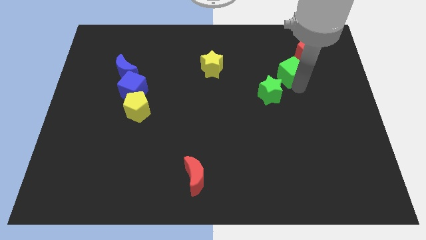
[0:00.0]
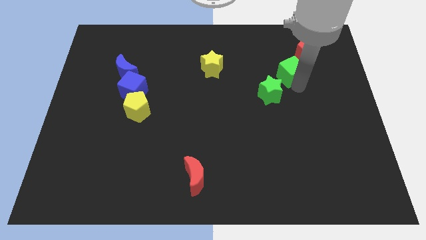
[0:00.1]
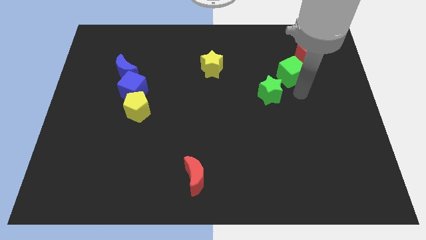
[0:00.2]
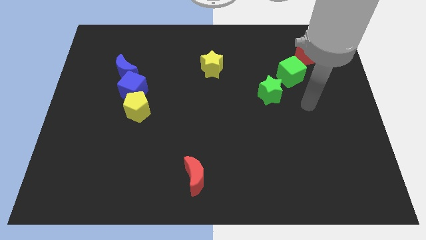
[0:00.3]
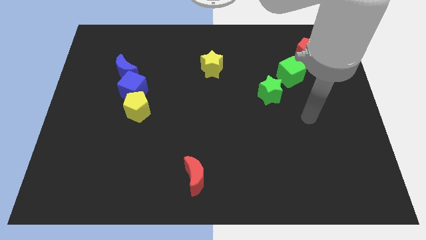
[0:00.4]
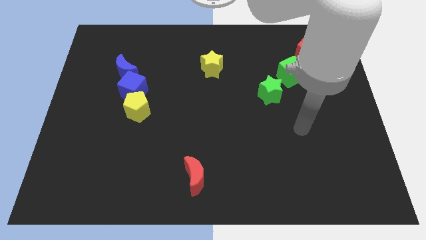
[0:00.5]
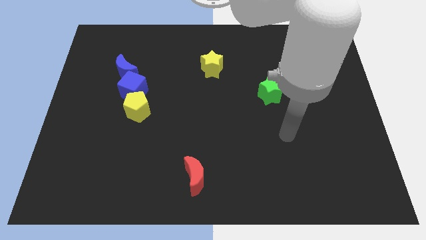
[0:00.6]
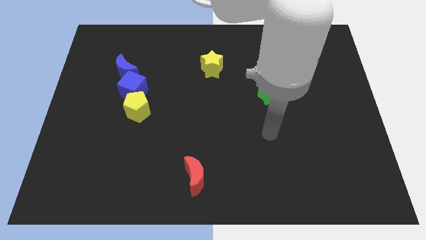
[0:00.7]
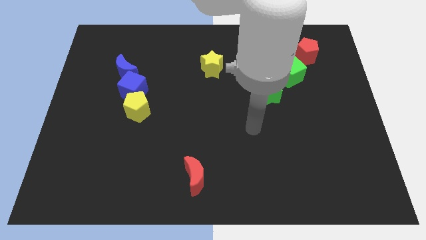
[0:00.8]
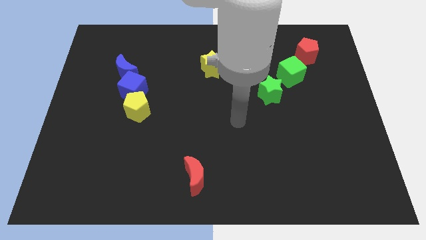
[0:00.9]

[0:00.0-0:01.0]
go away from the green cube

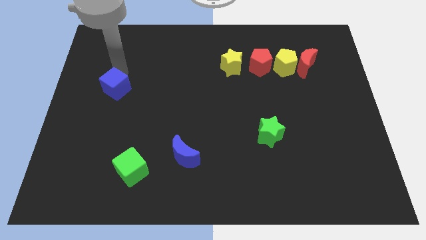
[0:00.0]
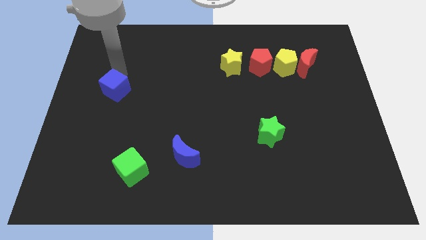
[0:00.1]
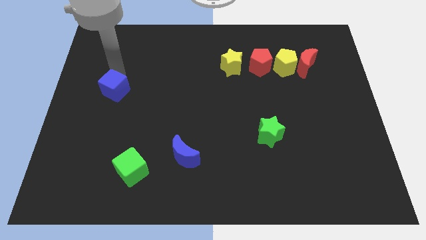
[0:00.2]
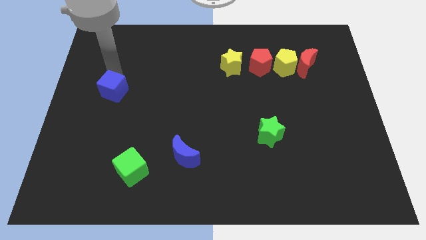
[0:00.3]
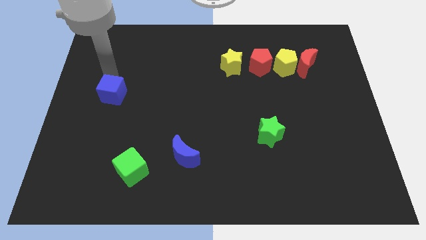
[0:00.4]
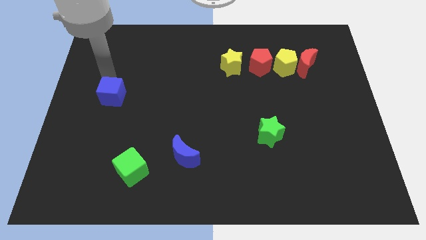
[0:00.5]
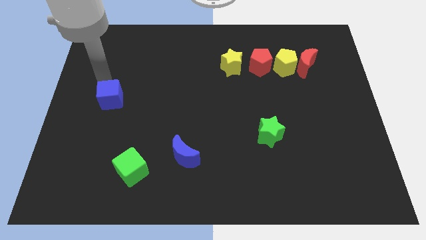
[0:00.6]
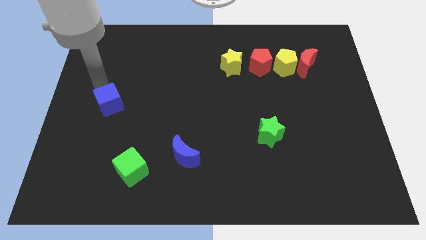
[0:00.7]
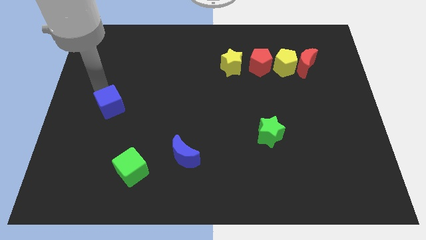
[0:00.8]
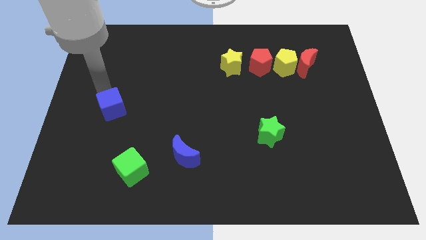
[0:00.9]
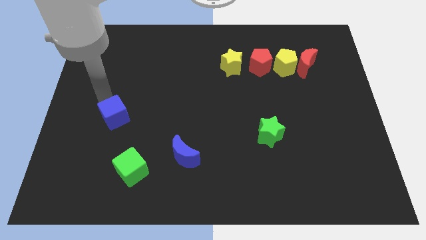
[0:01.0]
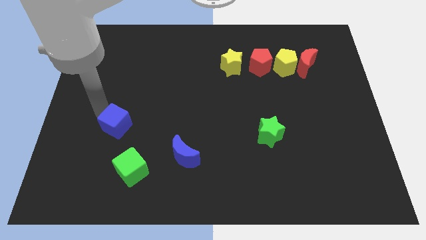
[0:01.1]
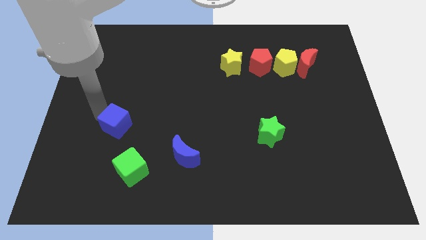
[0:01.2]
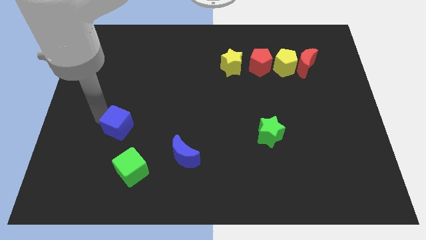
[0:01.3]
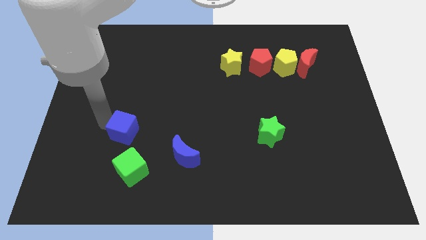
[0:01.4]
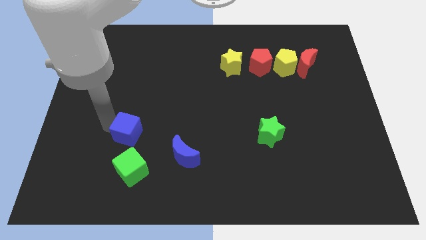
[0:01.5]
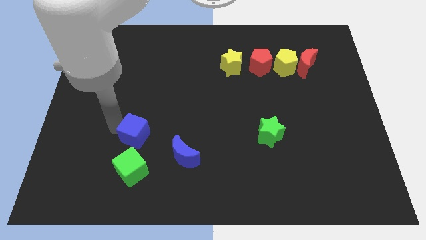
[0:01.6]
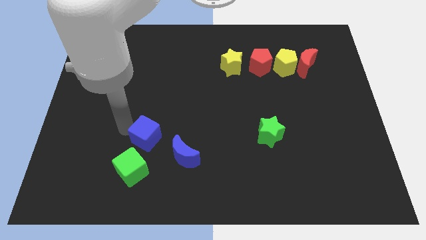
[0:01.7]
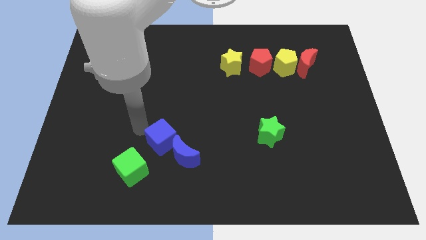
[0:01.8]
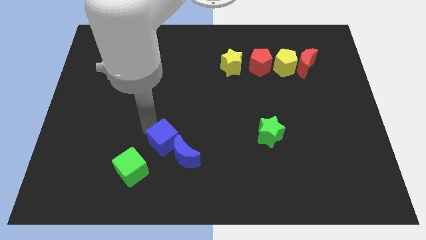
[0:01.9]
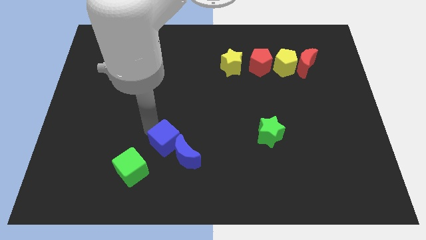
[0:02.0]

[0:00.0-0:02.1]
place the blue cube near to the blue crescent

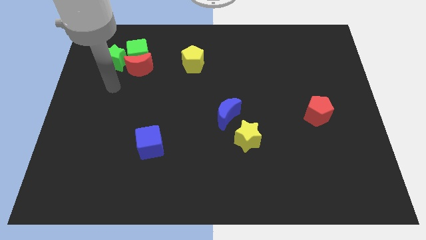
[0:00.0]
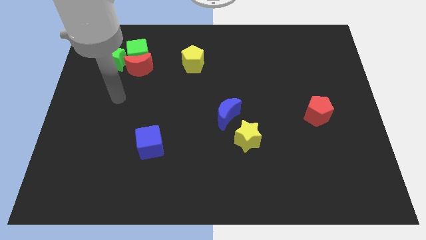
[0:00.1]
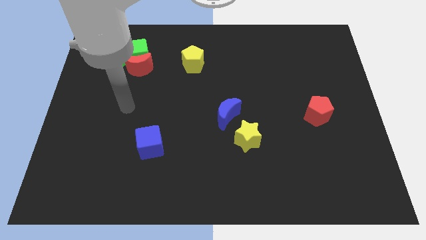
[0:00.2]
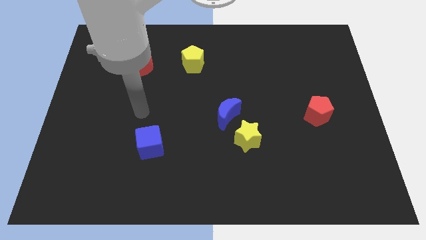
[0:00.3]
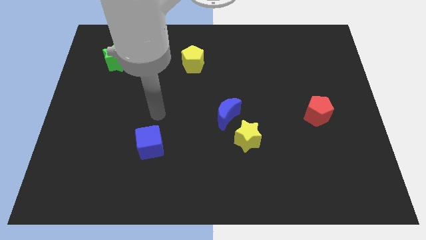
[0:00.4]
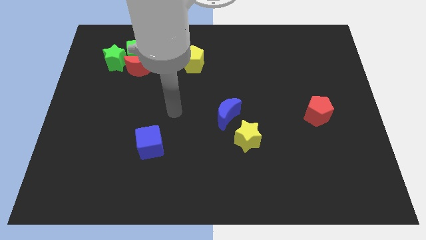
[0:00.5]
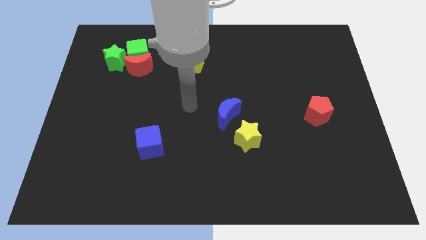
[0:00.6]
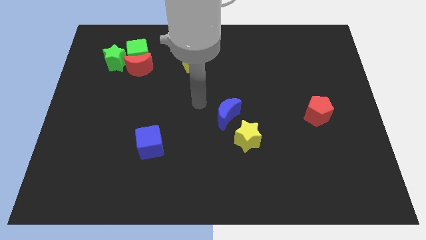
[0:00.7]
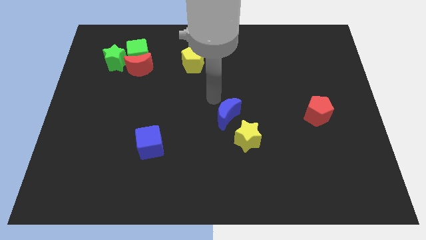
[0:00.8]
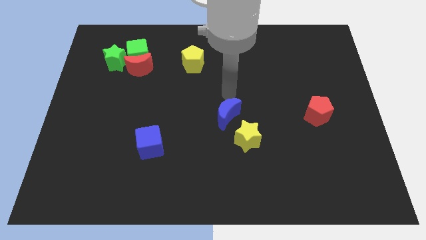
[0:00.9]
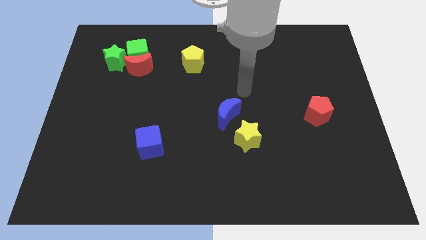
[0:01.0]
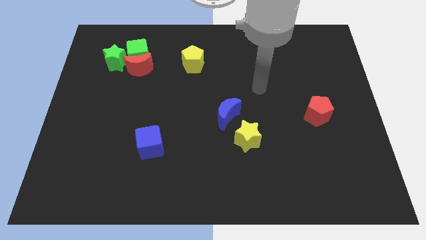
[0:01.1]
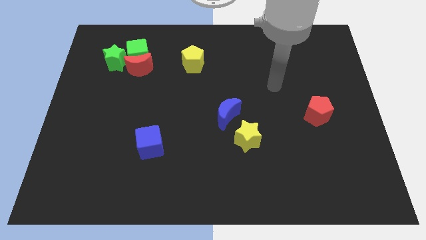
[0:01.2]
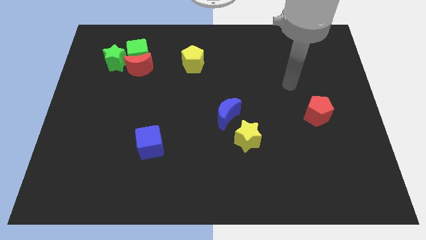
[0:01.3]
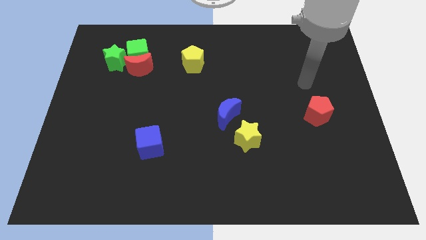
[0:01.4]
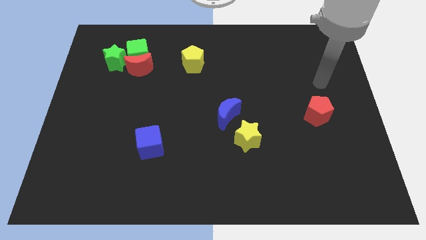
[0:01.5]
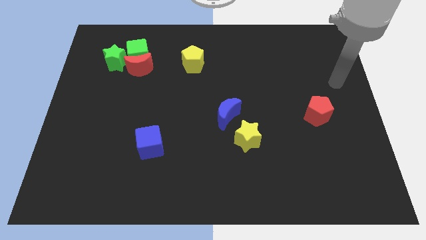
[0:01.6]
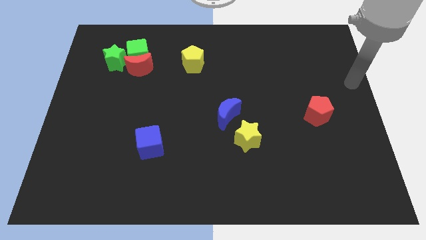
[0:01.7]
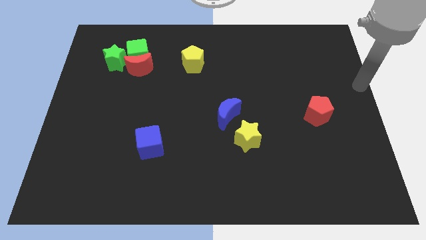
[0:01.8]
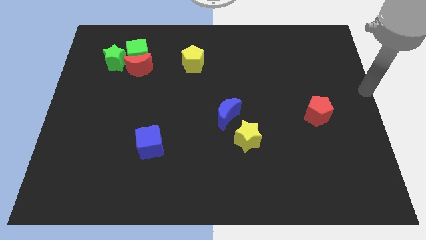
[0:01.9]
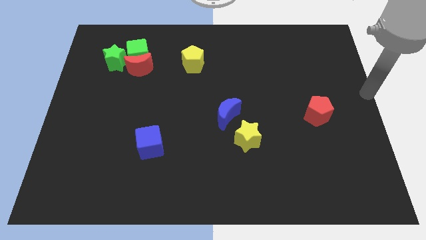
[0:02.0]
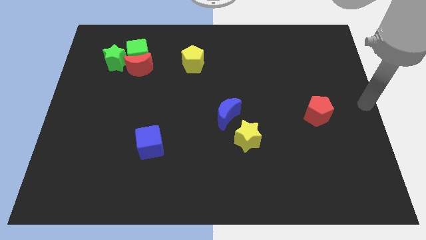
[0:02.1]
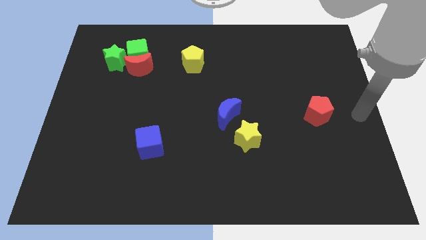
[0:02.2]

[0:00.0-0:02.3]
move your arm to the right side of the red pentagon

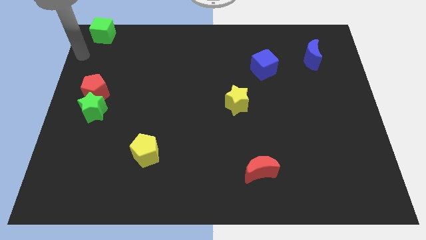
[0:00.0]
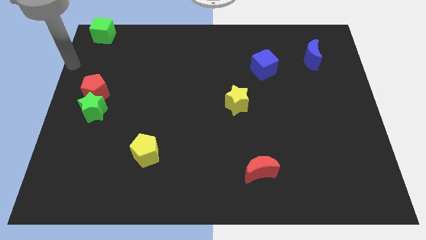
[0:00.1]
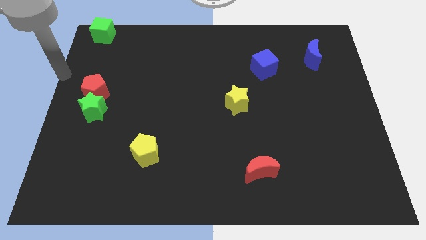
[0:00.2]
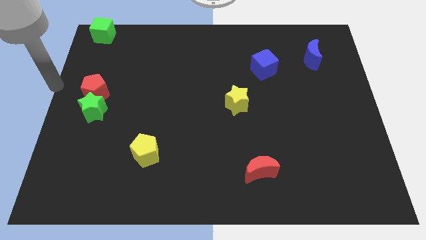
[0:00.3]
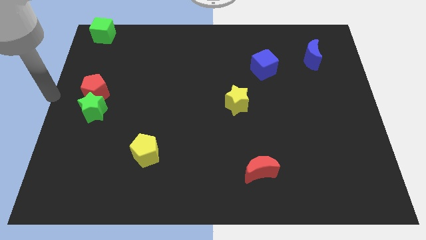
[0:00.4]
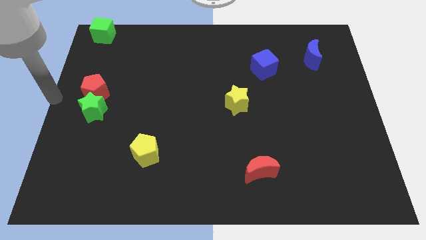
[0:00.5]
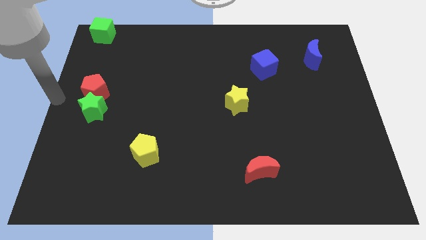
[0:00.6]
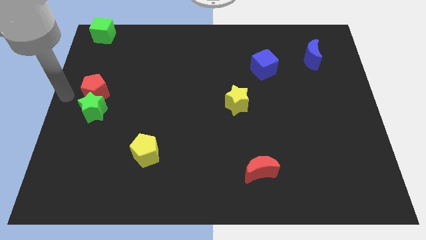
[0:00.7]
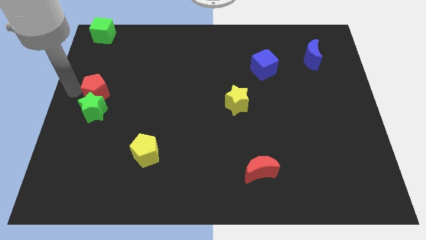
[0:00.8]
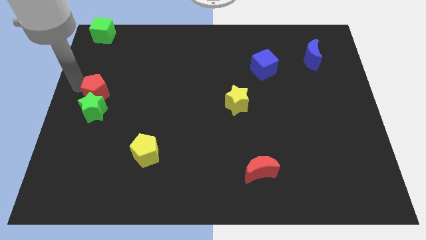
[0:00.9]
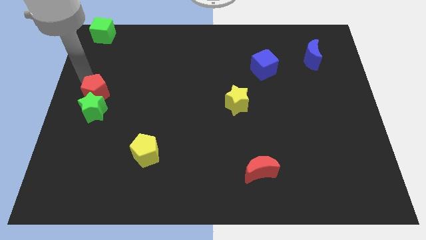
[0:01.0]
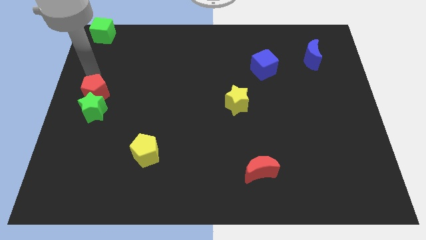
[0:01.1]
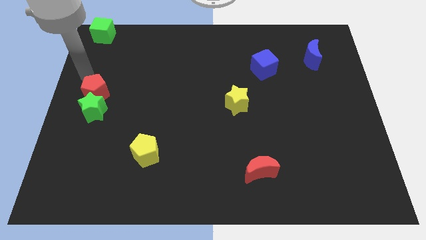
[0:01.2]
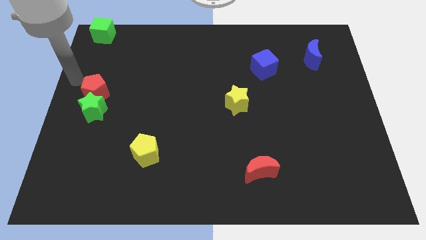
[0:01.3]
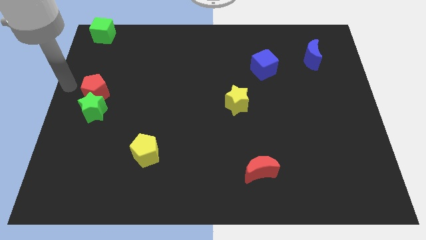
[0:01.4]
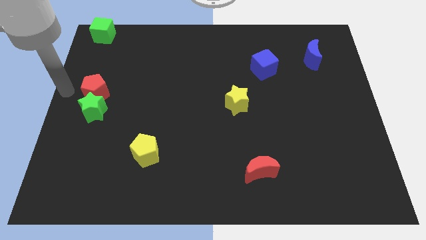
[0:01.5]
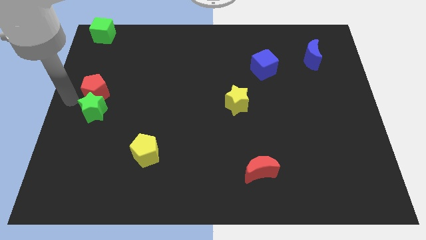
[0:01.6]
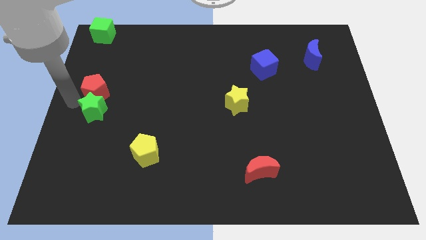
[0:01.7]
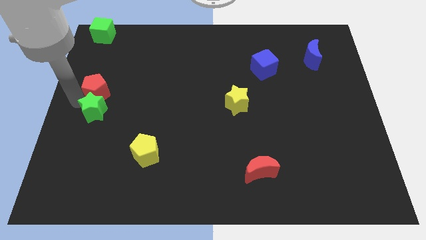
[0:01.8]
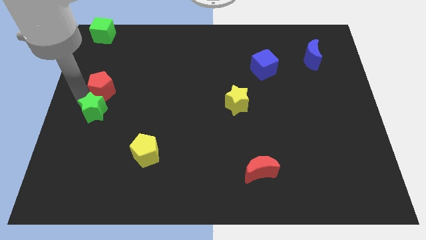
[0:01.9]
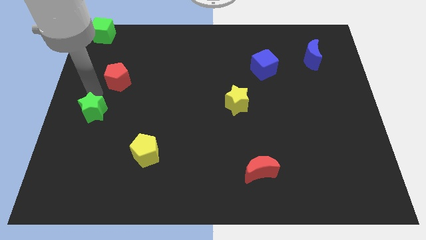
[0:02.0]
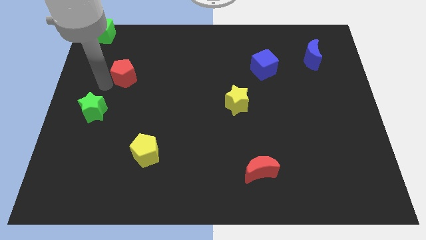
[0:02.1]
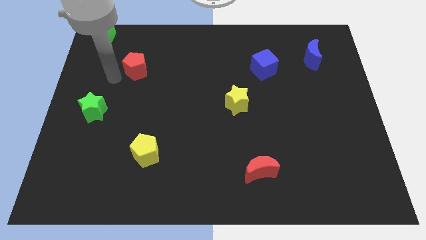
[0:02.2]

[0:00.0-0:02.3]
separate the red pentagon from the green star

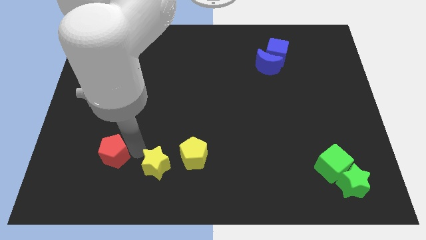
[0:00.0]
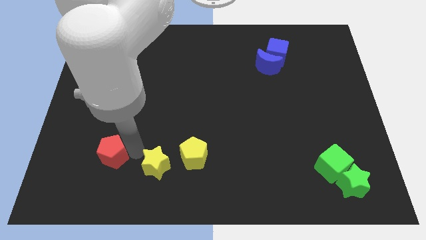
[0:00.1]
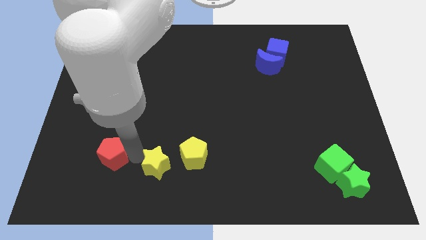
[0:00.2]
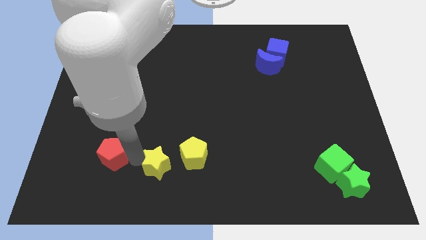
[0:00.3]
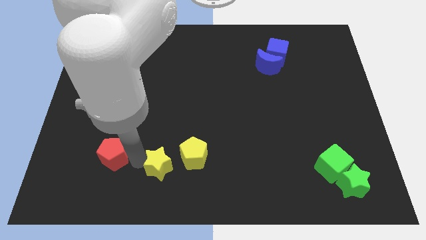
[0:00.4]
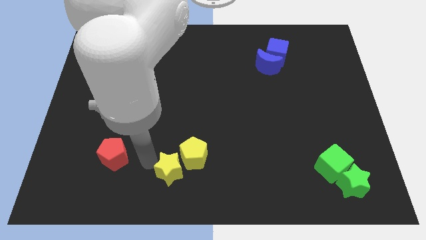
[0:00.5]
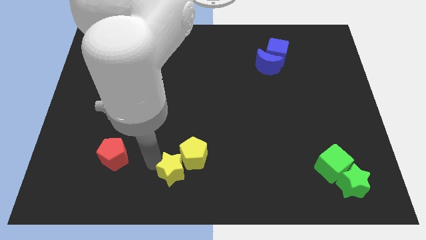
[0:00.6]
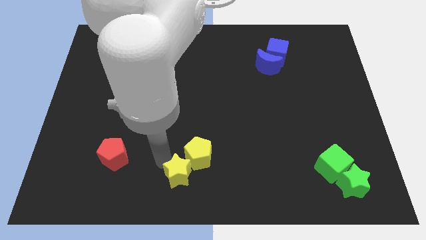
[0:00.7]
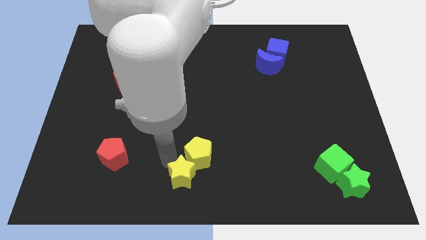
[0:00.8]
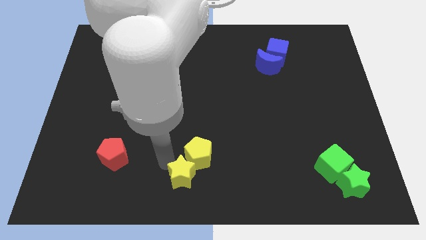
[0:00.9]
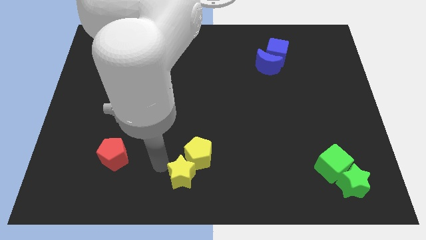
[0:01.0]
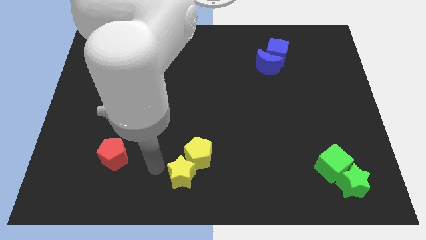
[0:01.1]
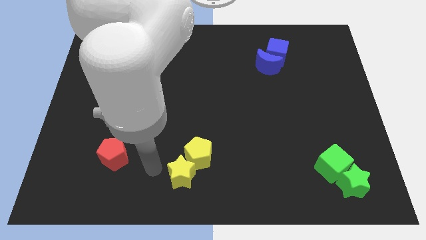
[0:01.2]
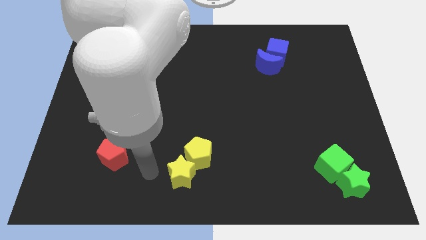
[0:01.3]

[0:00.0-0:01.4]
move the yellow pentagon with the yellow star
